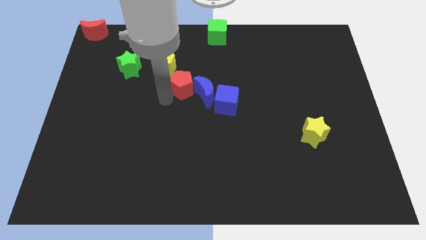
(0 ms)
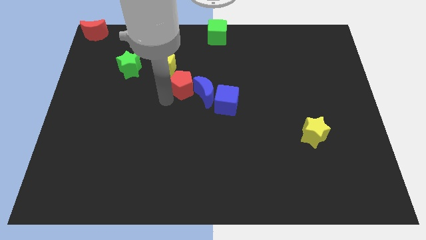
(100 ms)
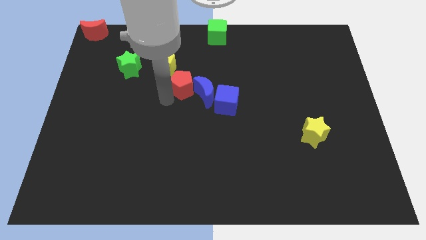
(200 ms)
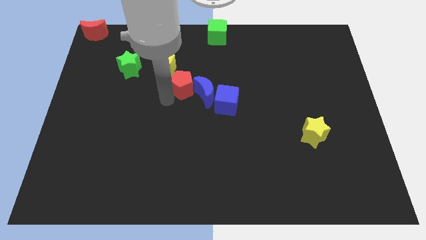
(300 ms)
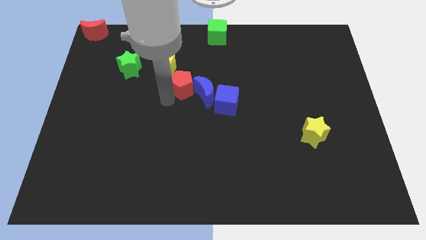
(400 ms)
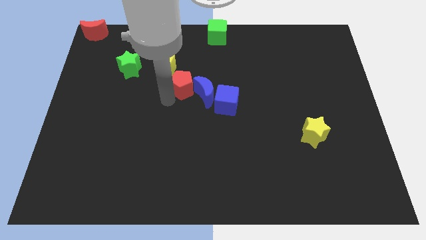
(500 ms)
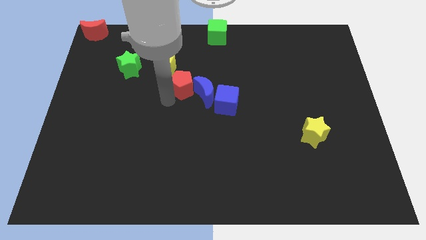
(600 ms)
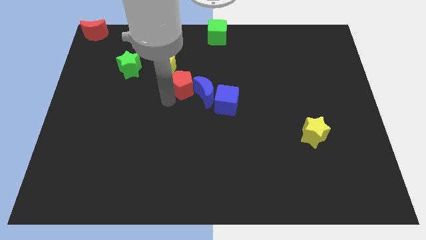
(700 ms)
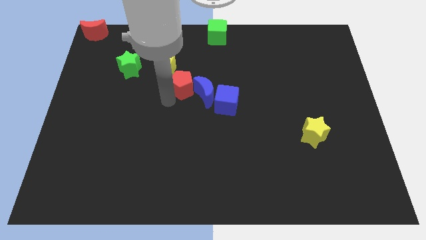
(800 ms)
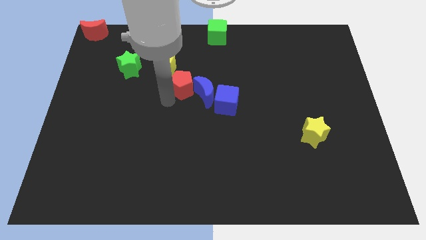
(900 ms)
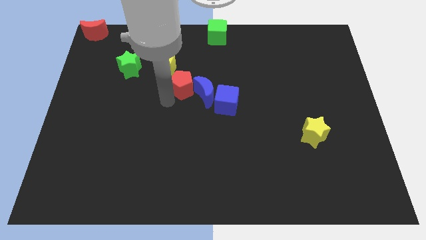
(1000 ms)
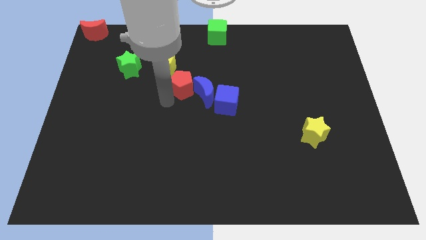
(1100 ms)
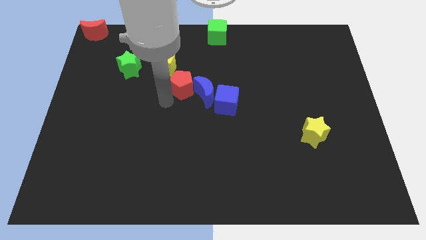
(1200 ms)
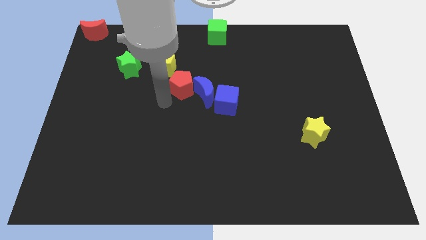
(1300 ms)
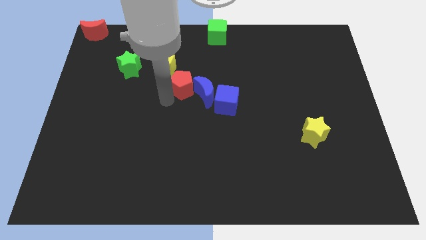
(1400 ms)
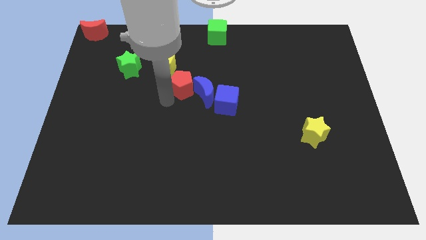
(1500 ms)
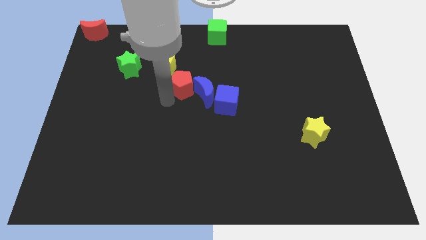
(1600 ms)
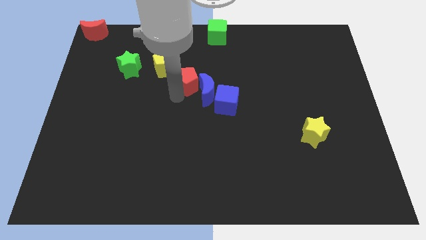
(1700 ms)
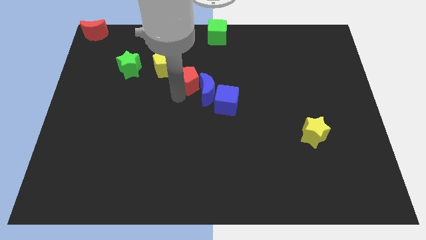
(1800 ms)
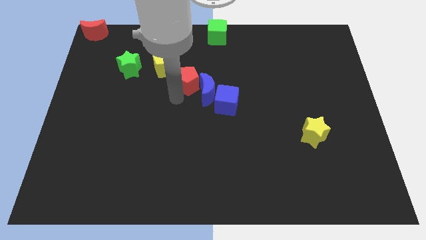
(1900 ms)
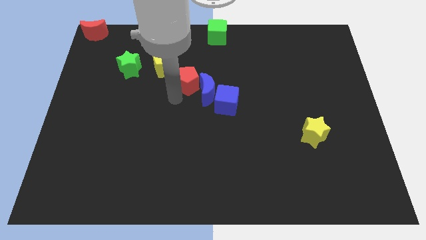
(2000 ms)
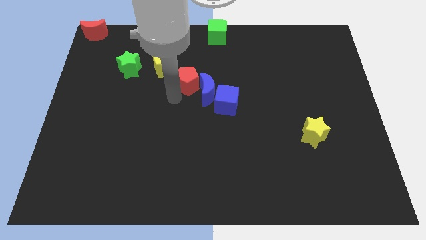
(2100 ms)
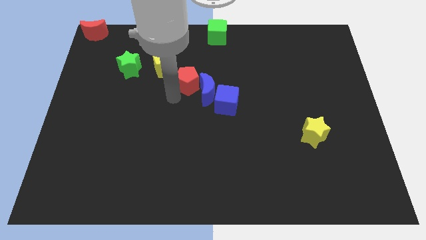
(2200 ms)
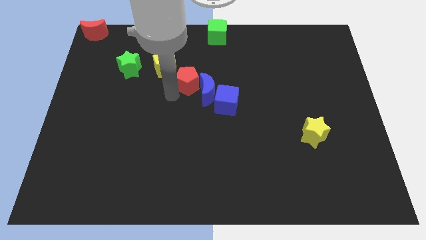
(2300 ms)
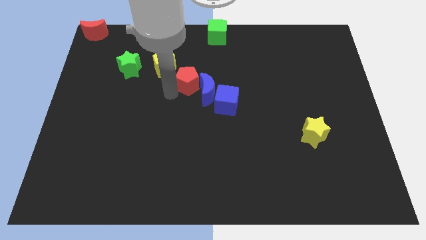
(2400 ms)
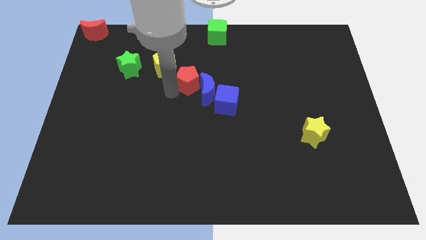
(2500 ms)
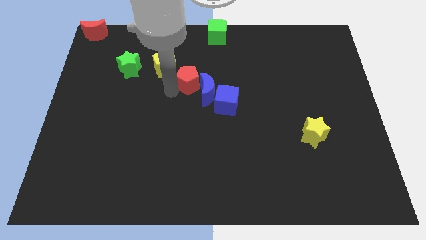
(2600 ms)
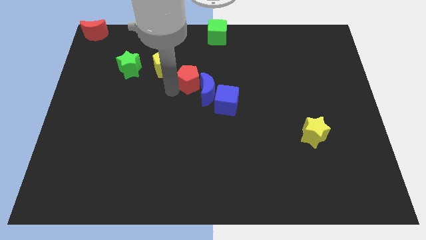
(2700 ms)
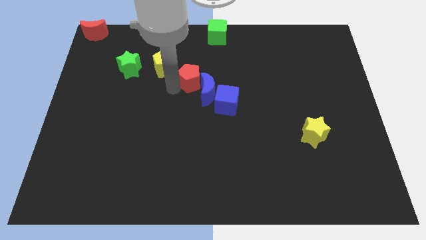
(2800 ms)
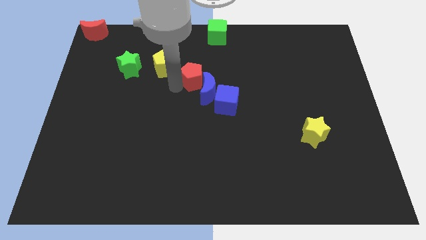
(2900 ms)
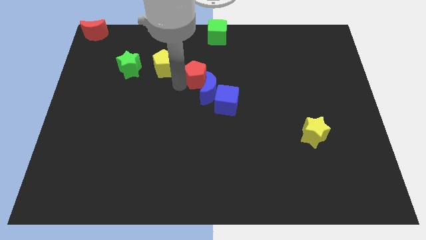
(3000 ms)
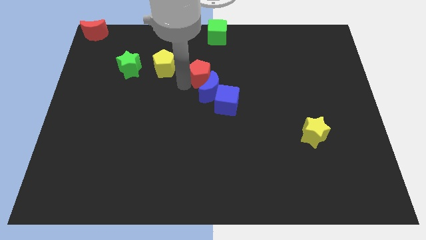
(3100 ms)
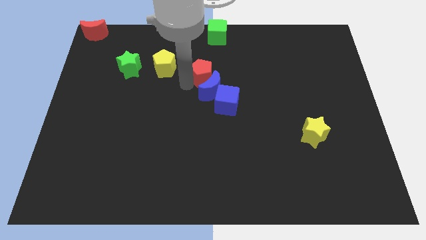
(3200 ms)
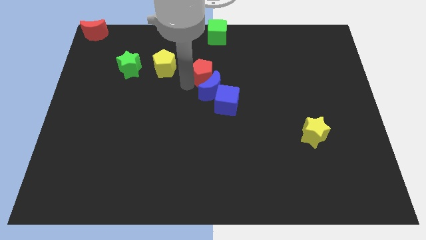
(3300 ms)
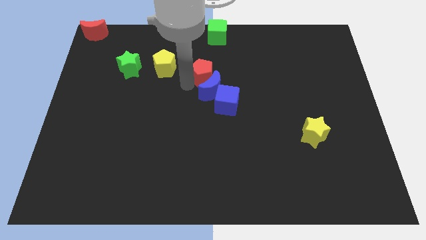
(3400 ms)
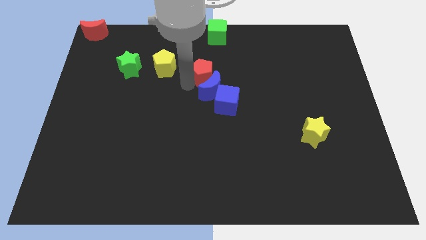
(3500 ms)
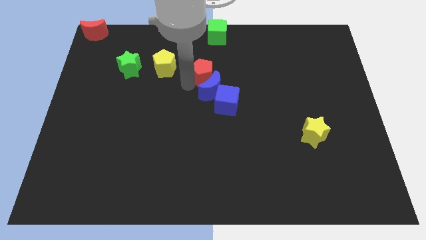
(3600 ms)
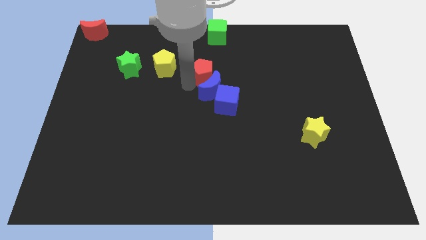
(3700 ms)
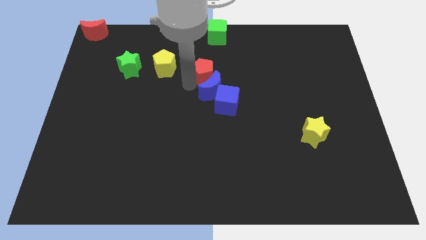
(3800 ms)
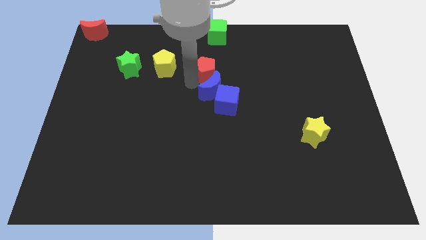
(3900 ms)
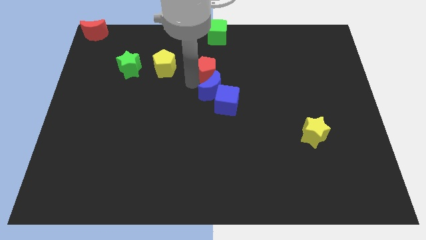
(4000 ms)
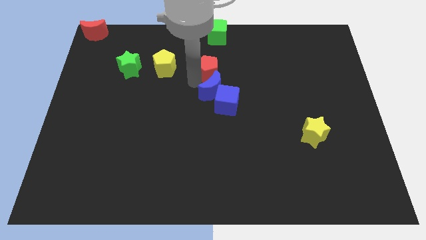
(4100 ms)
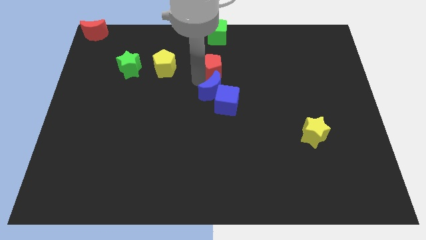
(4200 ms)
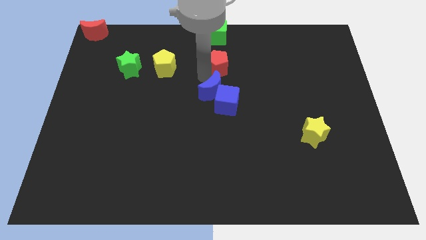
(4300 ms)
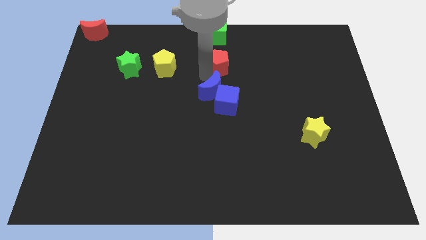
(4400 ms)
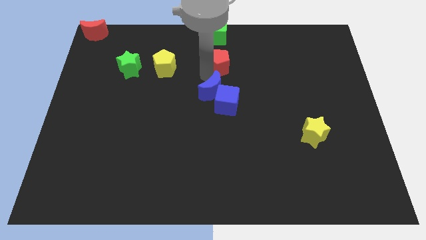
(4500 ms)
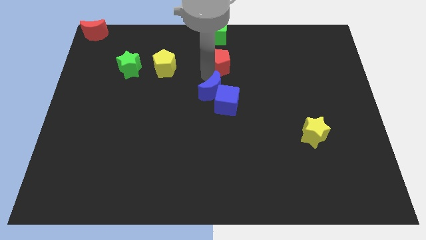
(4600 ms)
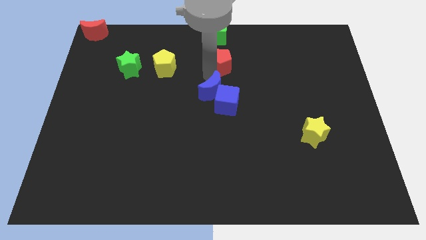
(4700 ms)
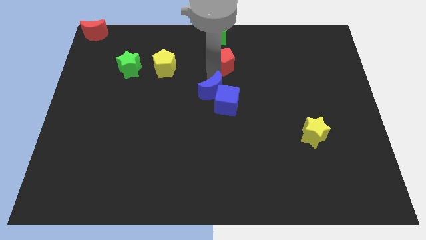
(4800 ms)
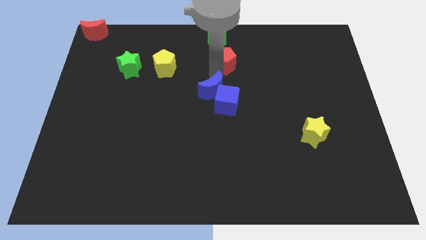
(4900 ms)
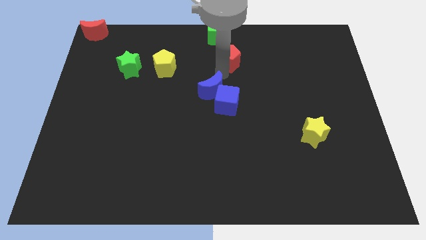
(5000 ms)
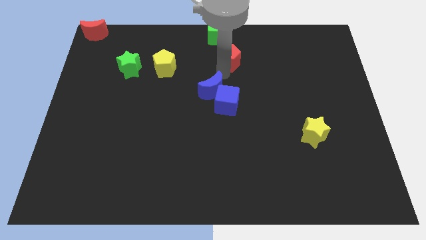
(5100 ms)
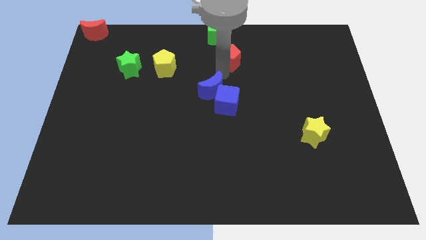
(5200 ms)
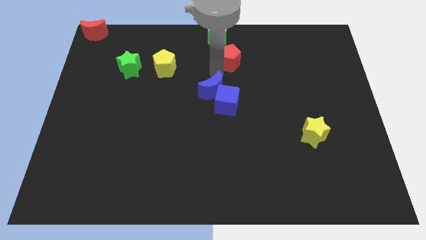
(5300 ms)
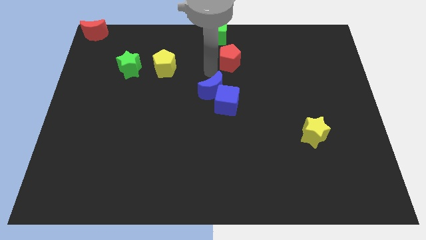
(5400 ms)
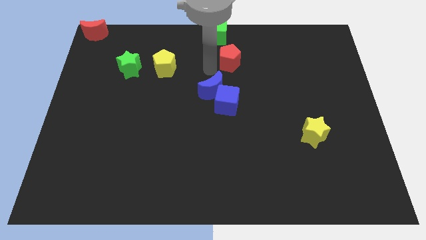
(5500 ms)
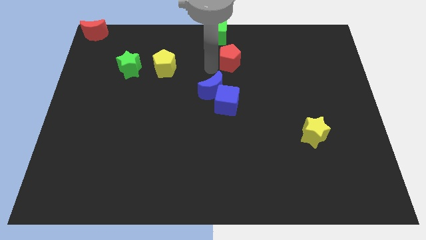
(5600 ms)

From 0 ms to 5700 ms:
place the red pentagon above the blue cube

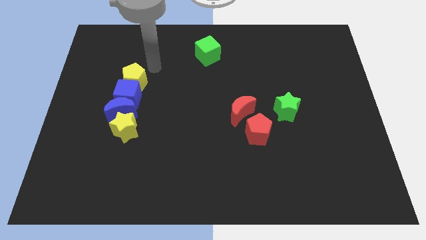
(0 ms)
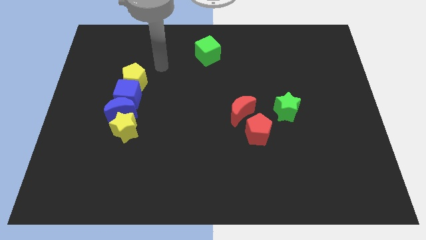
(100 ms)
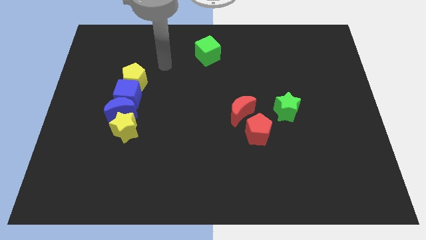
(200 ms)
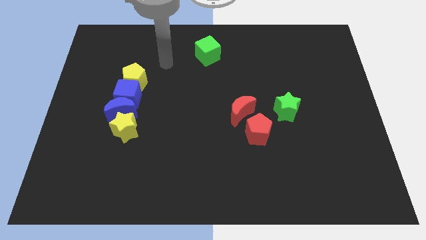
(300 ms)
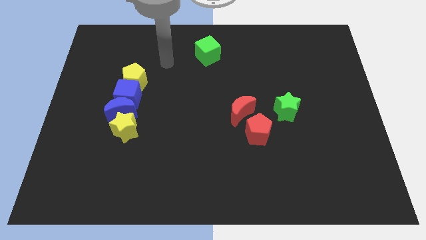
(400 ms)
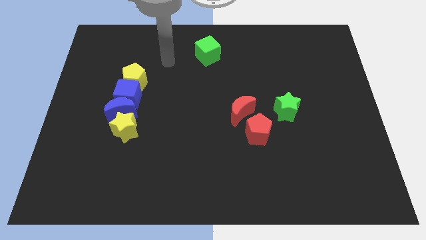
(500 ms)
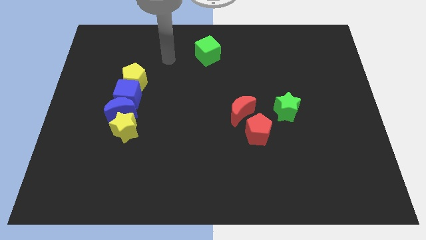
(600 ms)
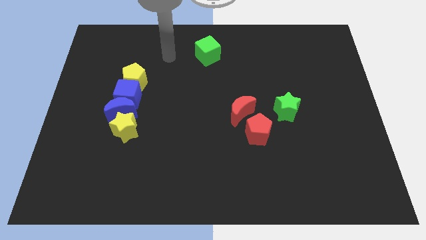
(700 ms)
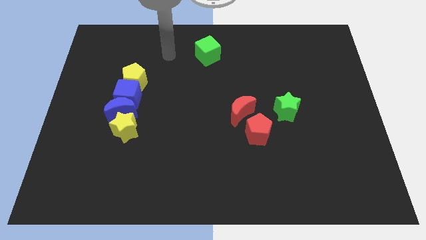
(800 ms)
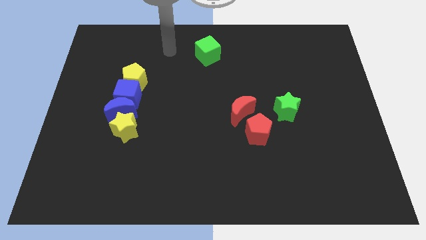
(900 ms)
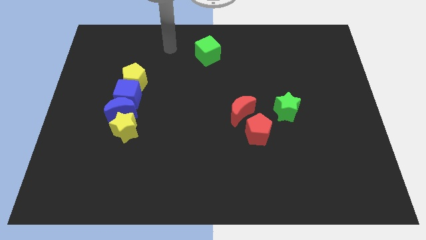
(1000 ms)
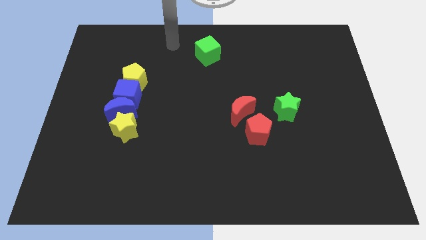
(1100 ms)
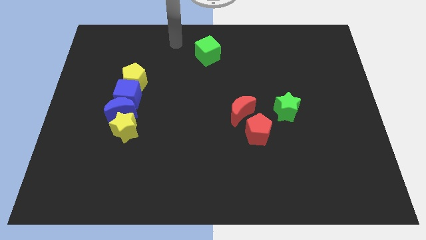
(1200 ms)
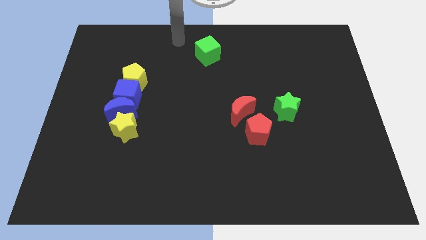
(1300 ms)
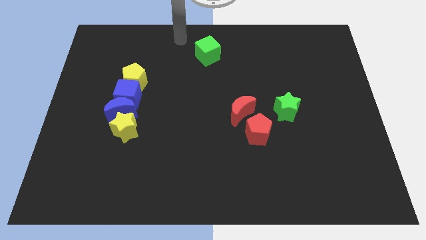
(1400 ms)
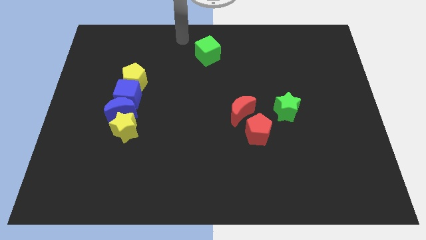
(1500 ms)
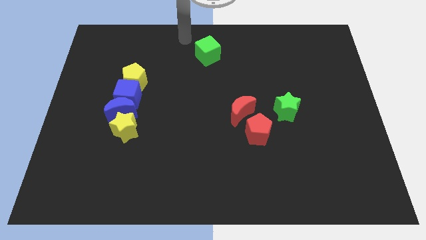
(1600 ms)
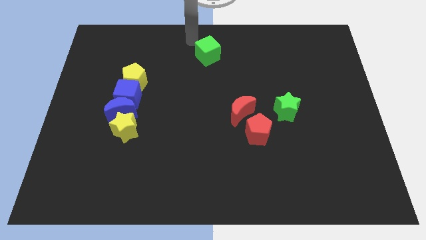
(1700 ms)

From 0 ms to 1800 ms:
move your arm towards the green cube

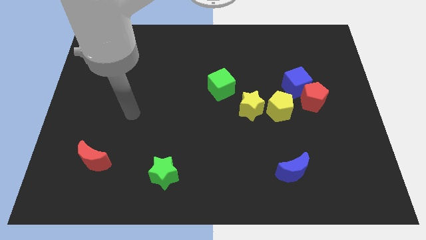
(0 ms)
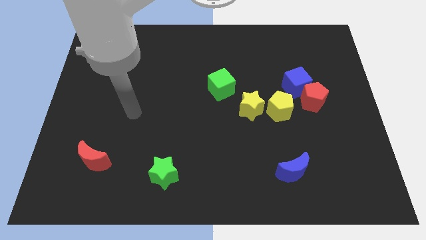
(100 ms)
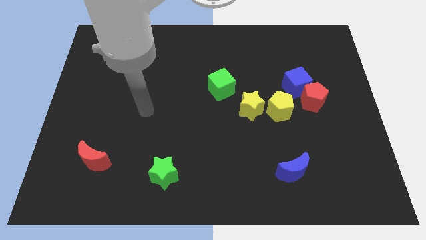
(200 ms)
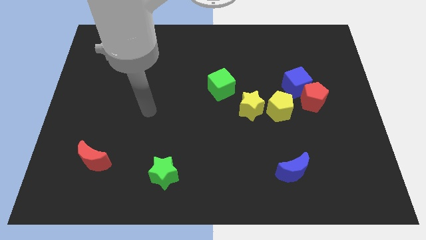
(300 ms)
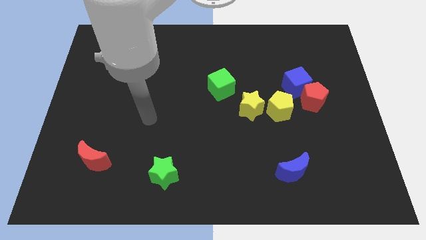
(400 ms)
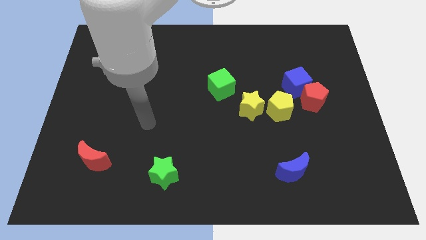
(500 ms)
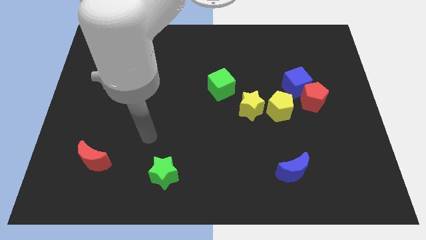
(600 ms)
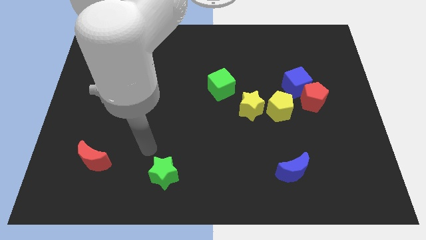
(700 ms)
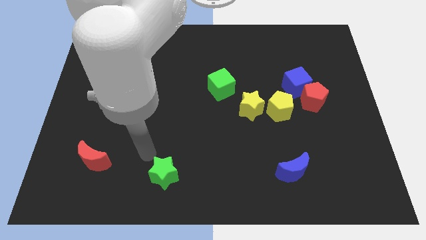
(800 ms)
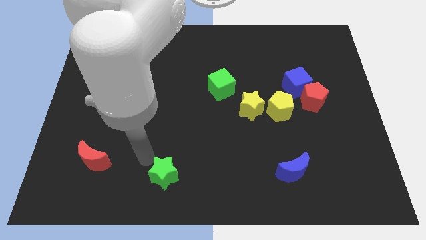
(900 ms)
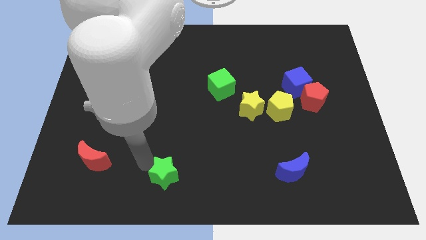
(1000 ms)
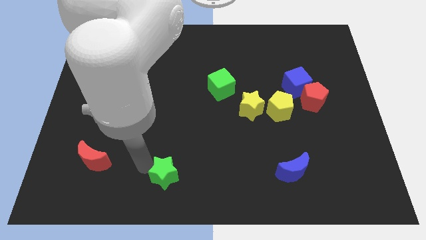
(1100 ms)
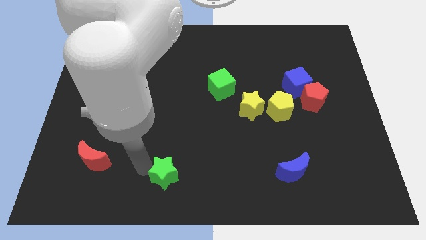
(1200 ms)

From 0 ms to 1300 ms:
move your arm close to the top left side of the green star

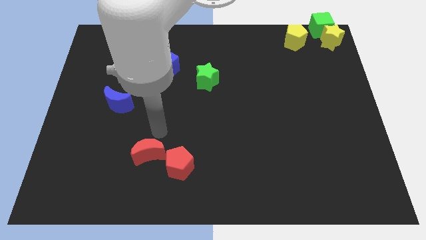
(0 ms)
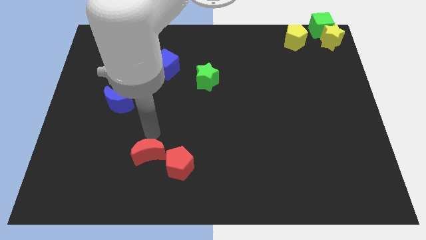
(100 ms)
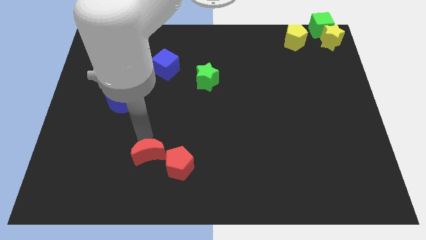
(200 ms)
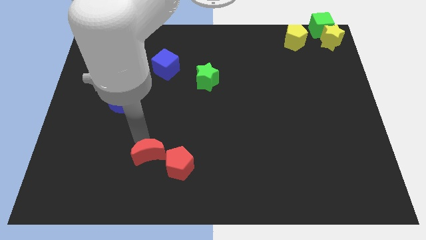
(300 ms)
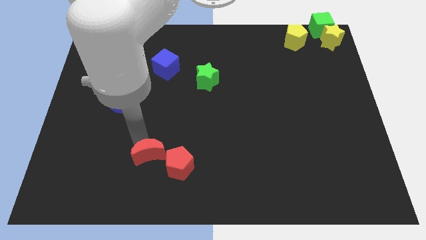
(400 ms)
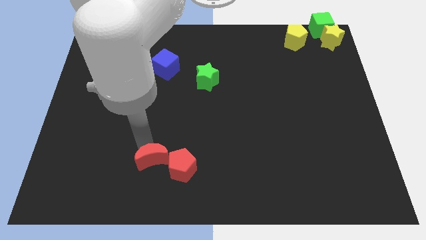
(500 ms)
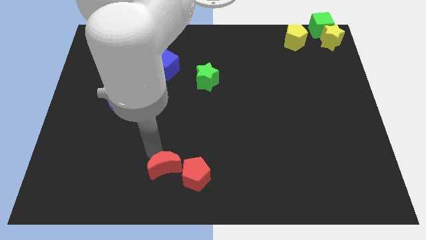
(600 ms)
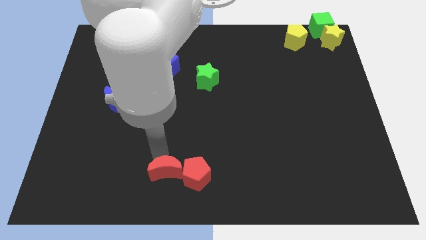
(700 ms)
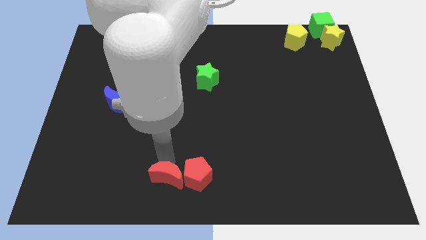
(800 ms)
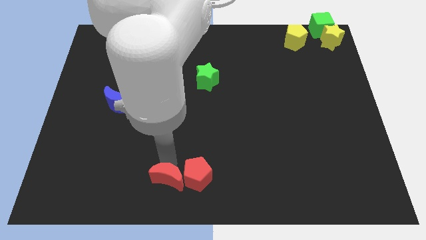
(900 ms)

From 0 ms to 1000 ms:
move the red pentagon along with the red crescent to the bottom center
